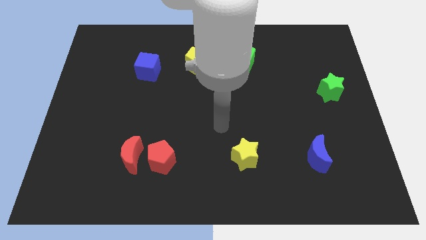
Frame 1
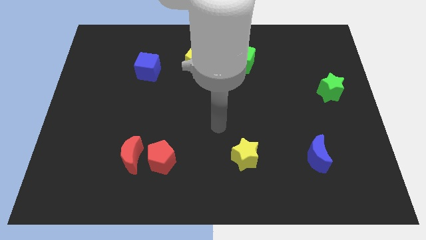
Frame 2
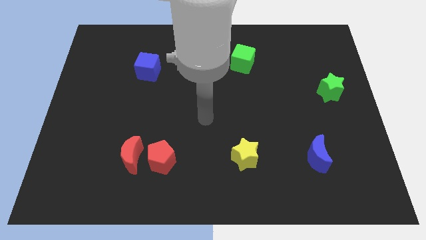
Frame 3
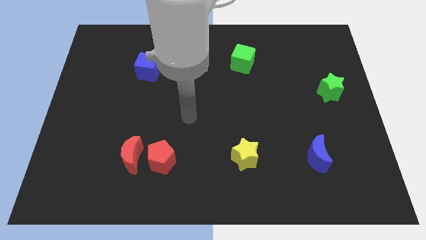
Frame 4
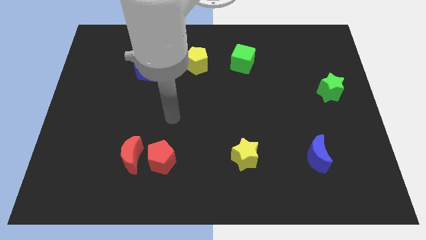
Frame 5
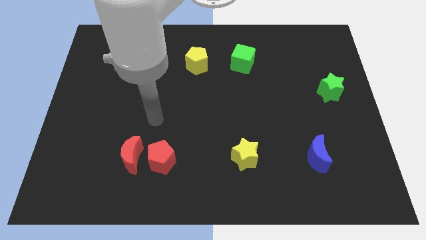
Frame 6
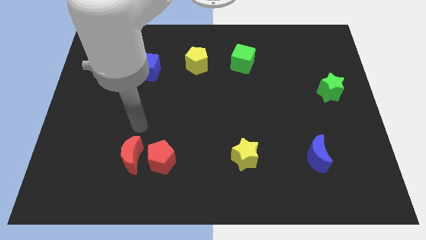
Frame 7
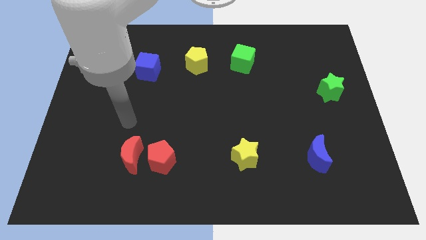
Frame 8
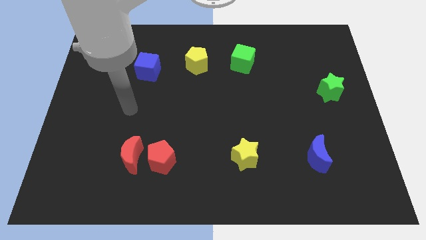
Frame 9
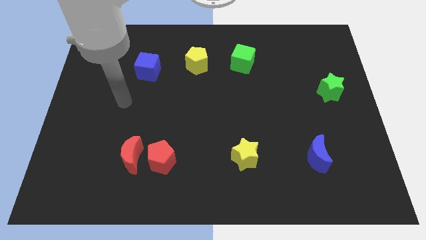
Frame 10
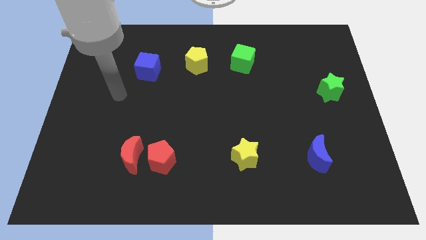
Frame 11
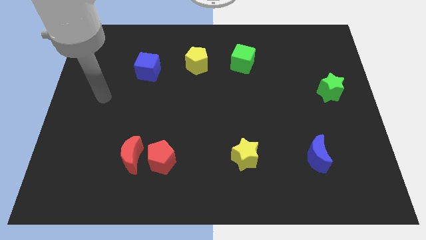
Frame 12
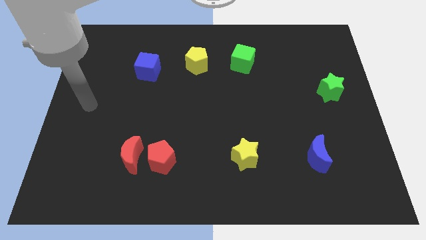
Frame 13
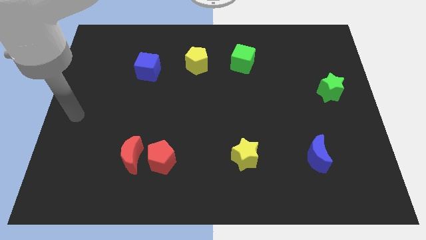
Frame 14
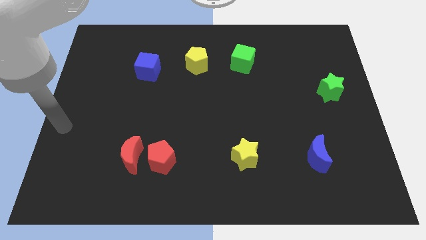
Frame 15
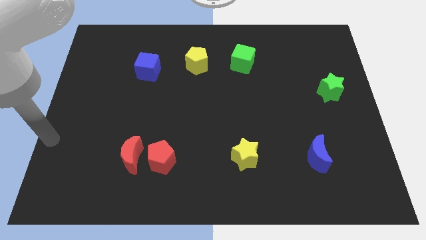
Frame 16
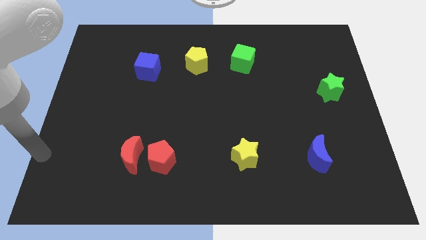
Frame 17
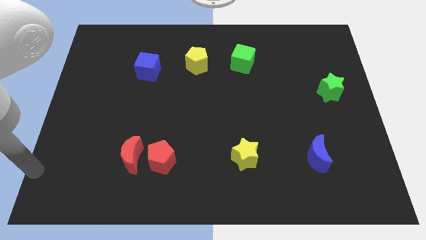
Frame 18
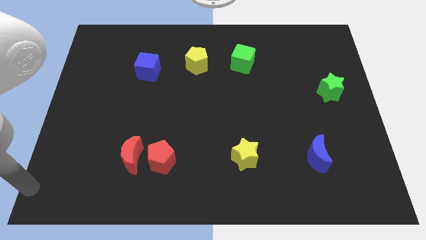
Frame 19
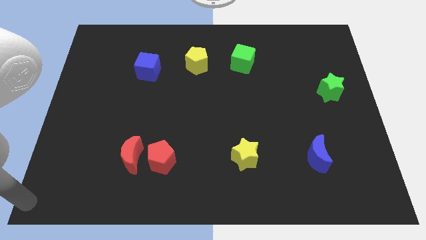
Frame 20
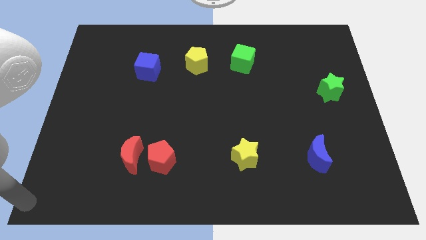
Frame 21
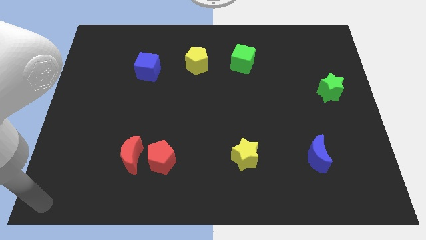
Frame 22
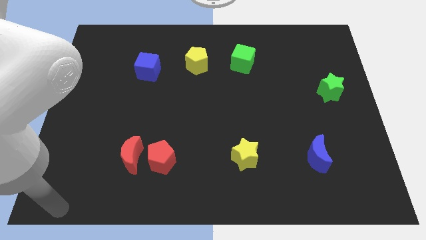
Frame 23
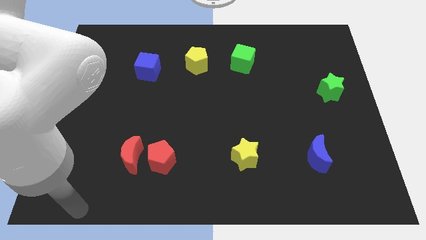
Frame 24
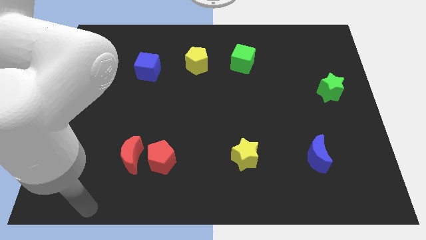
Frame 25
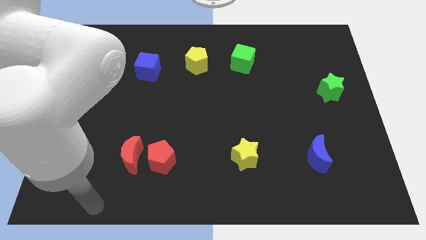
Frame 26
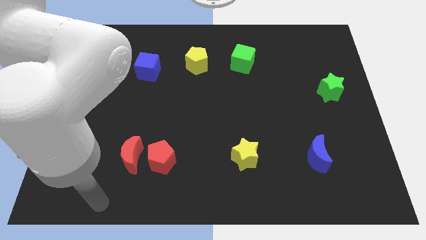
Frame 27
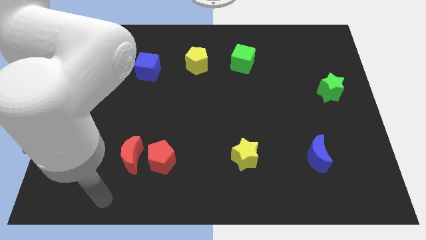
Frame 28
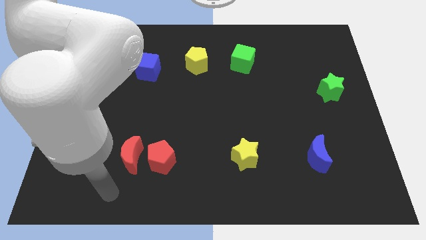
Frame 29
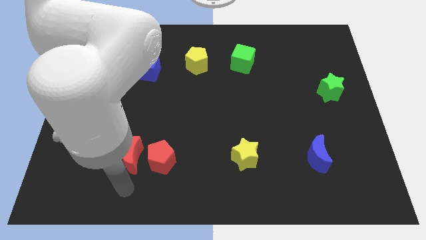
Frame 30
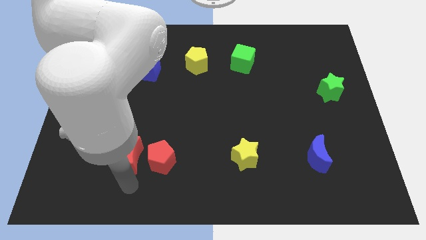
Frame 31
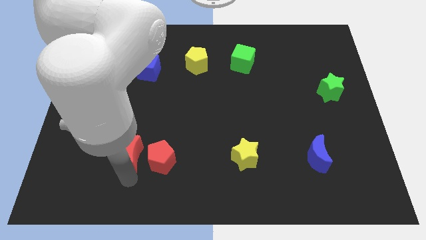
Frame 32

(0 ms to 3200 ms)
touch the red moon

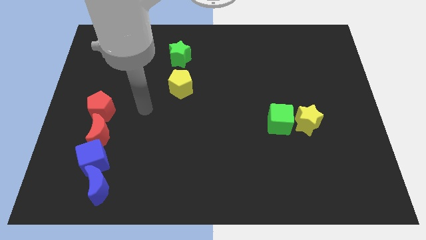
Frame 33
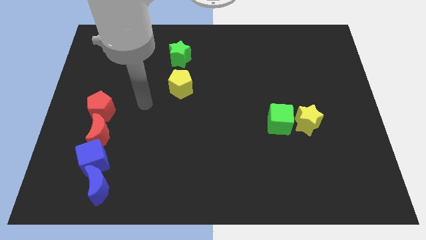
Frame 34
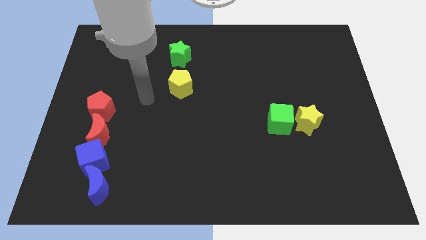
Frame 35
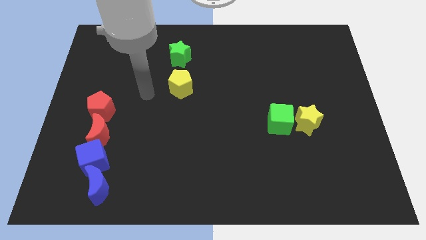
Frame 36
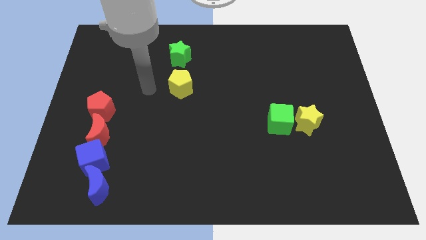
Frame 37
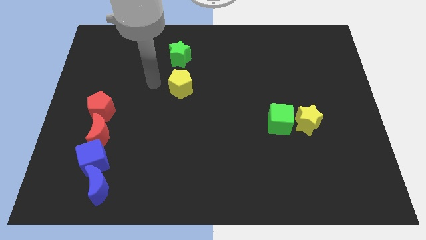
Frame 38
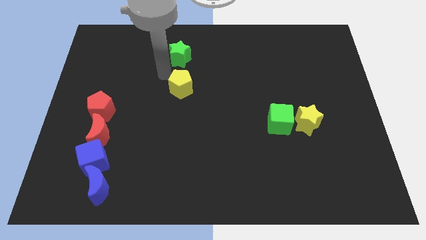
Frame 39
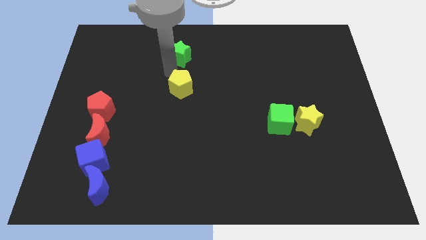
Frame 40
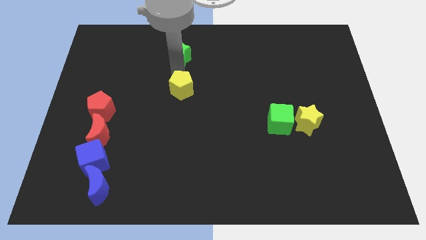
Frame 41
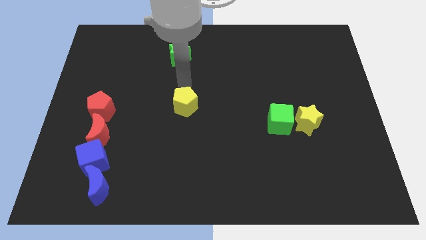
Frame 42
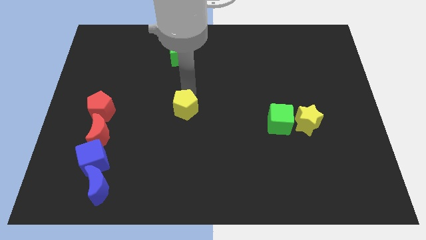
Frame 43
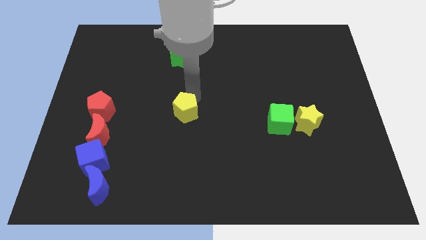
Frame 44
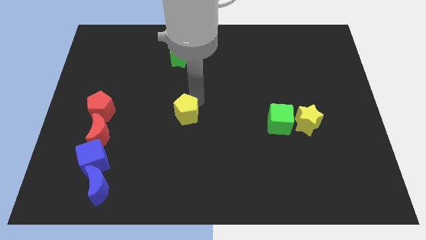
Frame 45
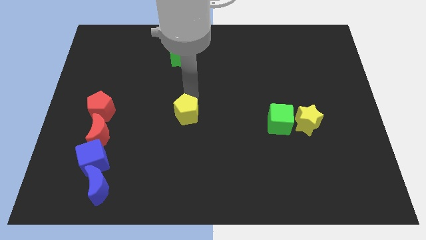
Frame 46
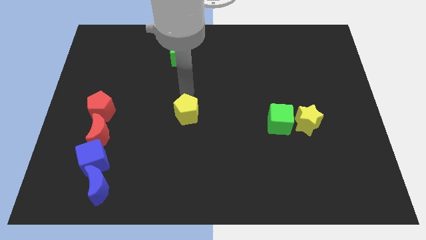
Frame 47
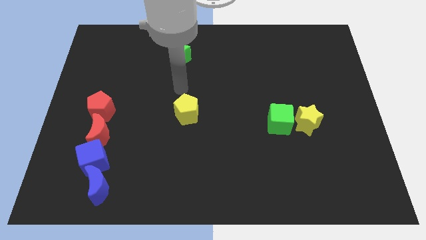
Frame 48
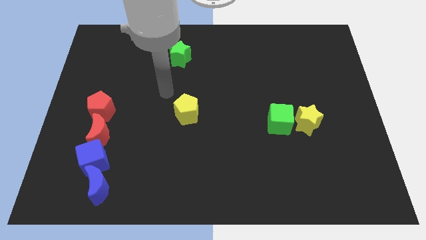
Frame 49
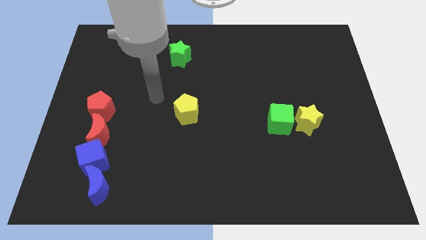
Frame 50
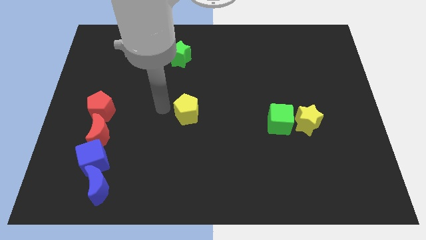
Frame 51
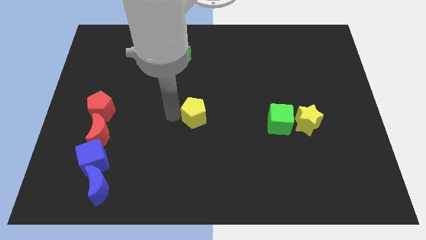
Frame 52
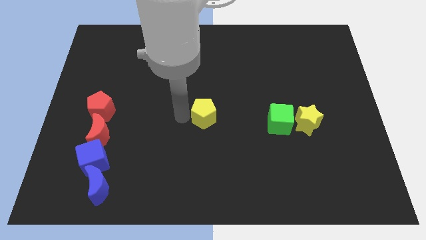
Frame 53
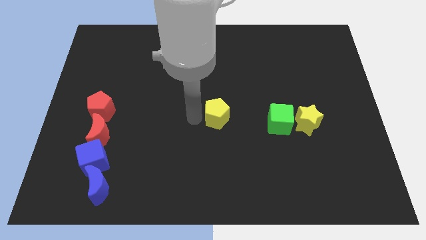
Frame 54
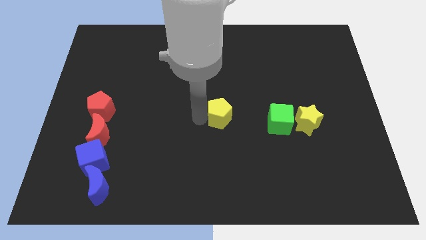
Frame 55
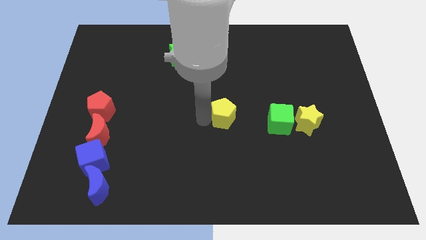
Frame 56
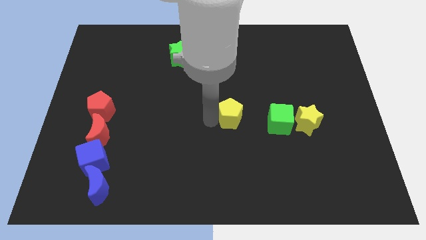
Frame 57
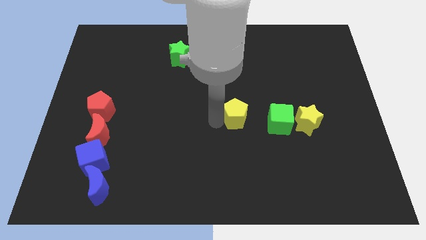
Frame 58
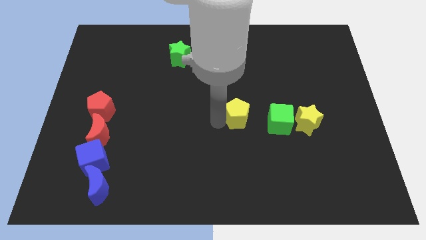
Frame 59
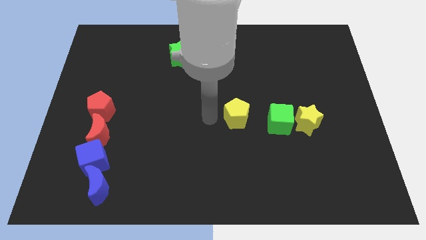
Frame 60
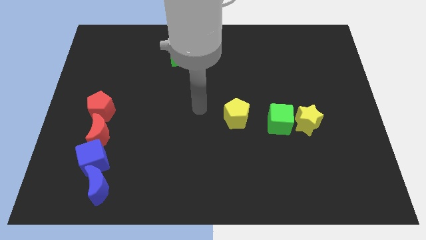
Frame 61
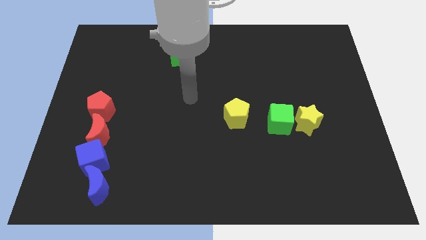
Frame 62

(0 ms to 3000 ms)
place the yellow pentagon close to the green cube

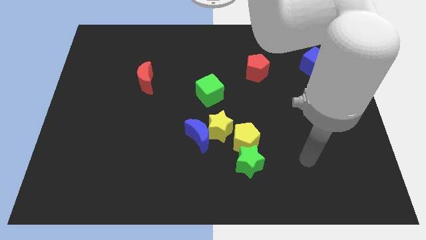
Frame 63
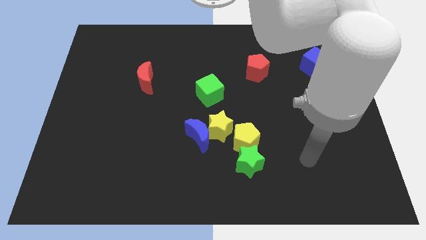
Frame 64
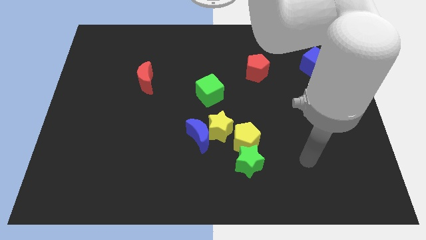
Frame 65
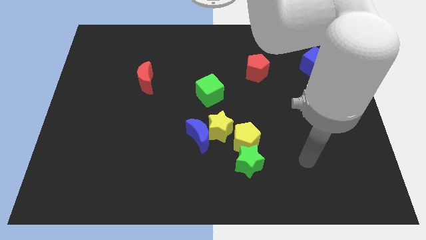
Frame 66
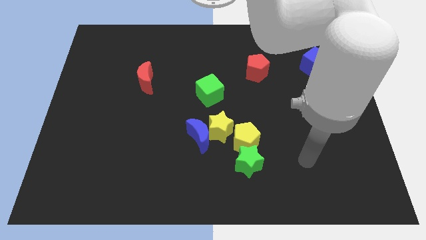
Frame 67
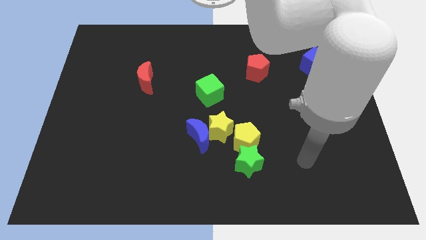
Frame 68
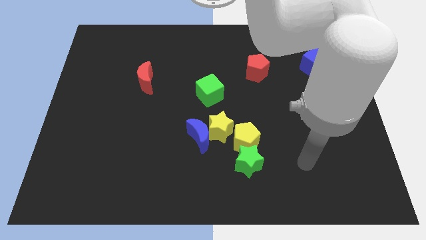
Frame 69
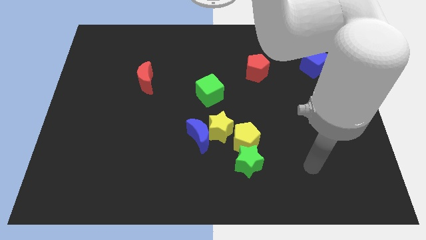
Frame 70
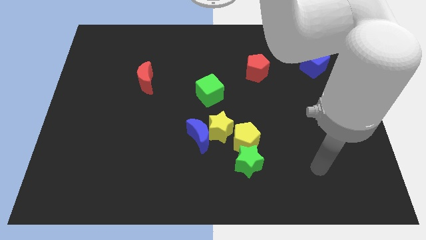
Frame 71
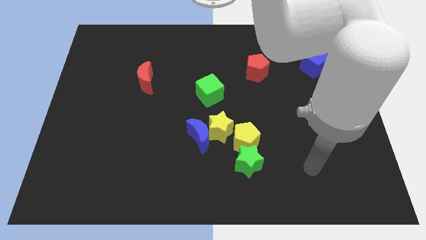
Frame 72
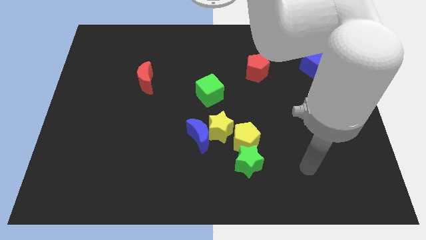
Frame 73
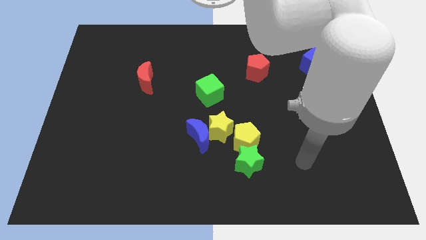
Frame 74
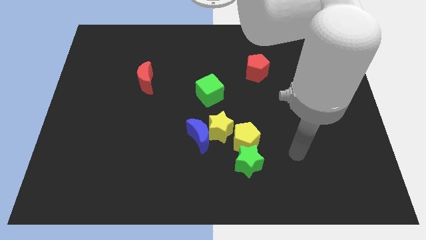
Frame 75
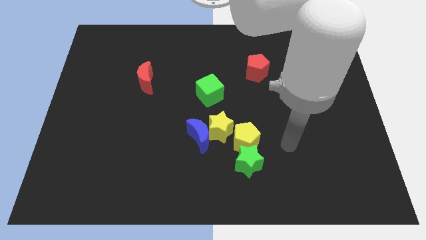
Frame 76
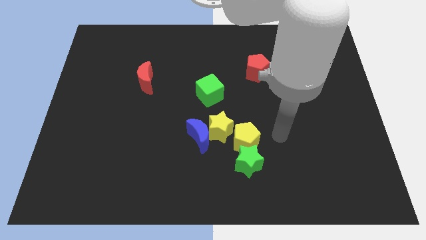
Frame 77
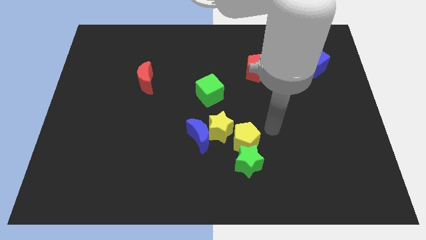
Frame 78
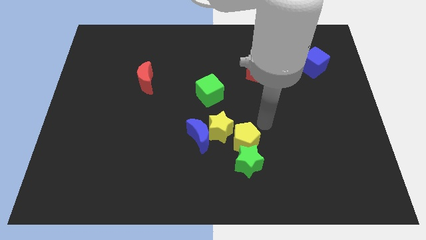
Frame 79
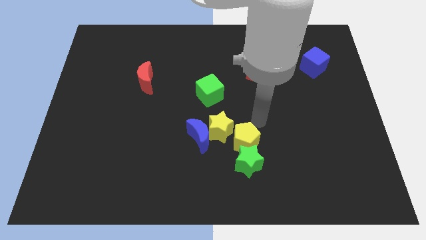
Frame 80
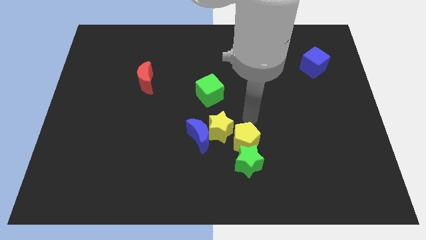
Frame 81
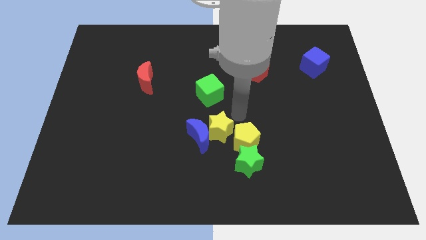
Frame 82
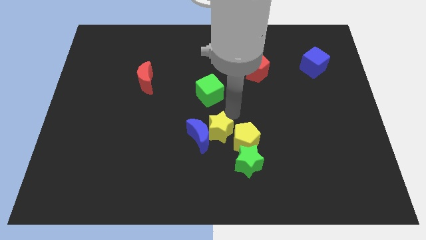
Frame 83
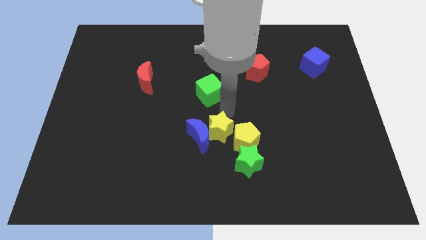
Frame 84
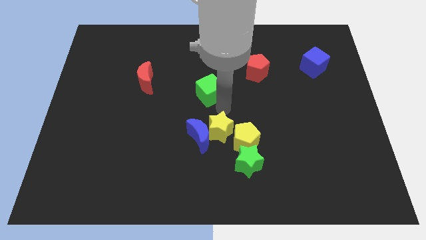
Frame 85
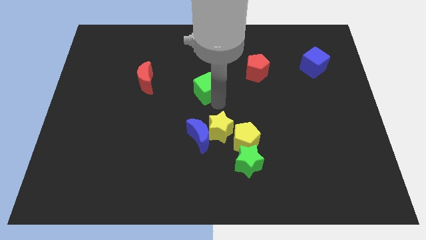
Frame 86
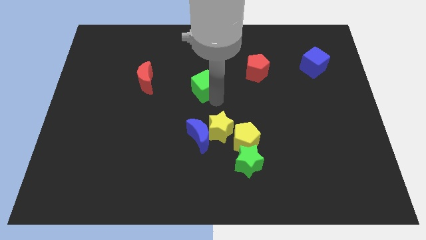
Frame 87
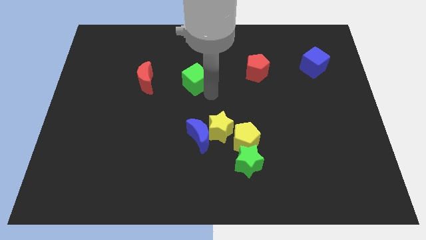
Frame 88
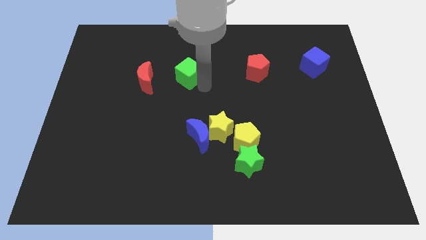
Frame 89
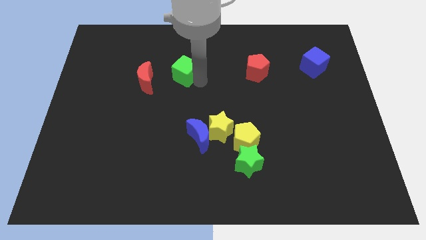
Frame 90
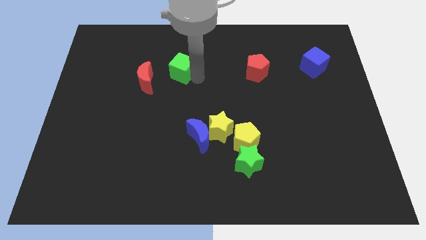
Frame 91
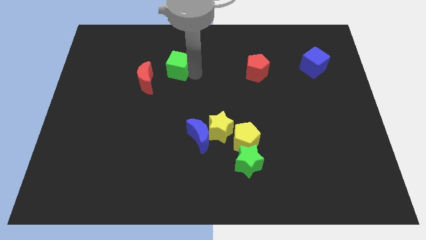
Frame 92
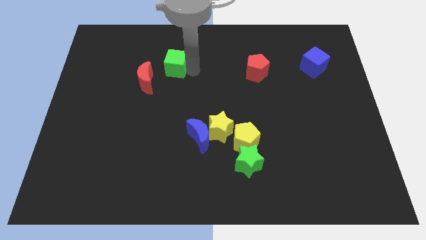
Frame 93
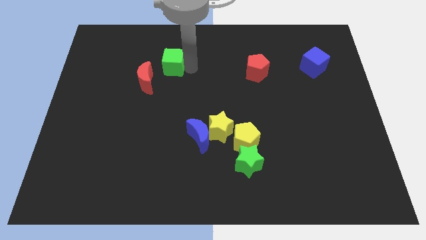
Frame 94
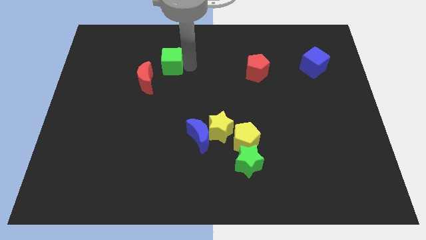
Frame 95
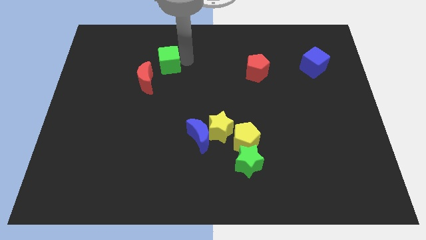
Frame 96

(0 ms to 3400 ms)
push the green cube to the top right of the red crescent
